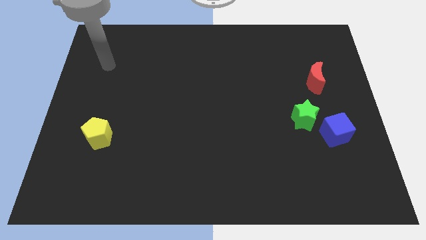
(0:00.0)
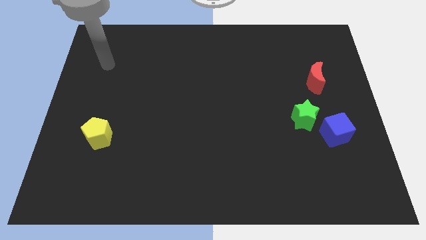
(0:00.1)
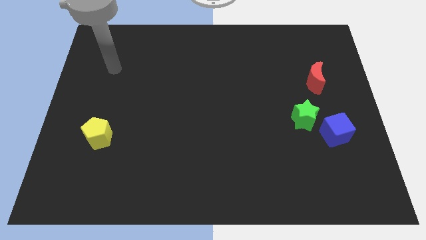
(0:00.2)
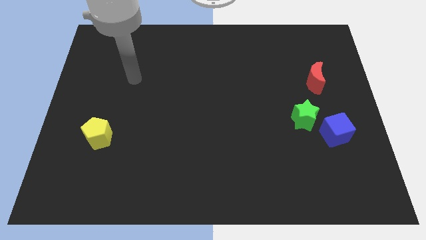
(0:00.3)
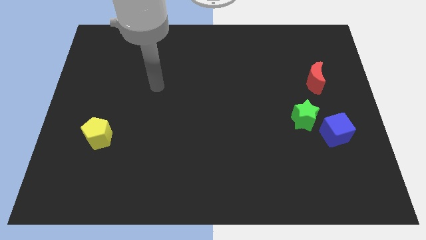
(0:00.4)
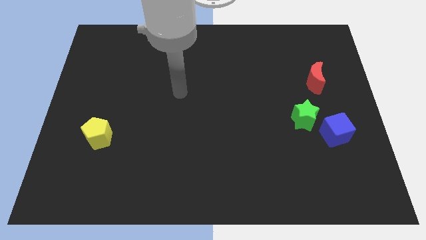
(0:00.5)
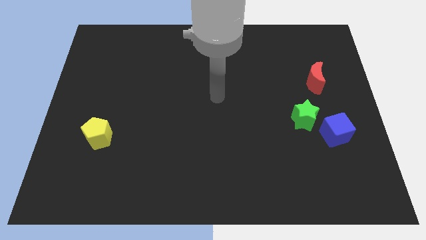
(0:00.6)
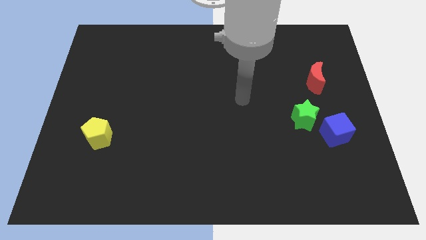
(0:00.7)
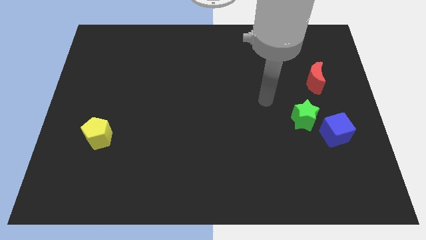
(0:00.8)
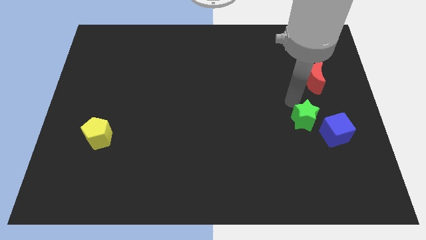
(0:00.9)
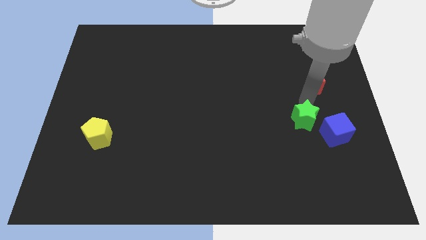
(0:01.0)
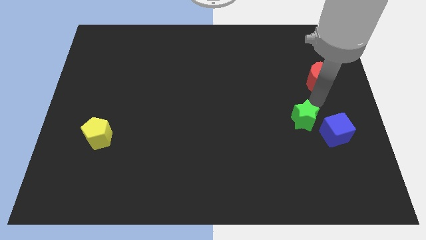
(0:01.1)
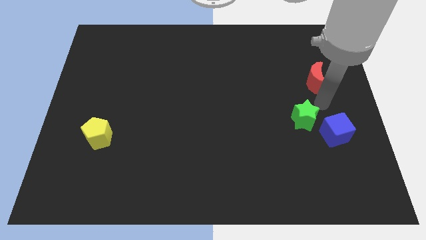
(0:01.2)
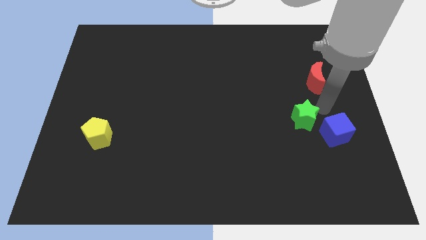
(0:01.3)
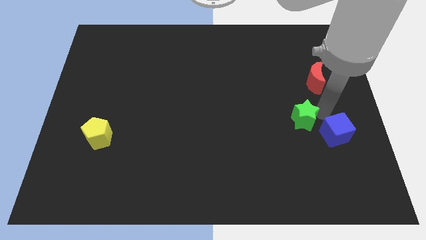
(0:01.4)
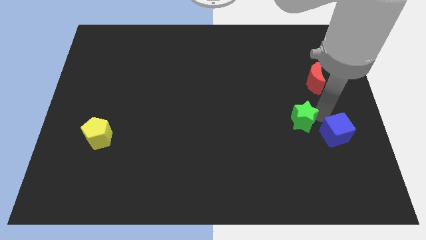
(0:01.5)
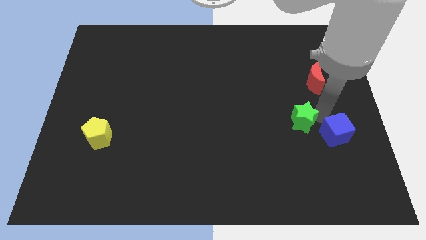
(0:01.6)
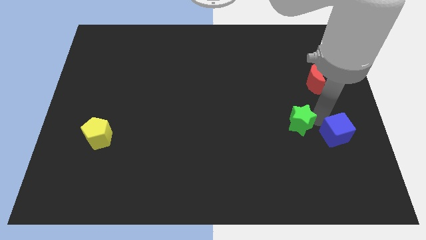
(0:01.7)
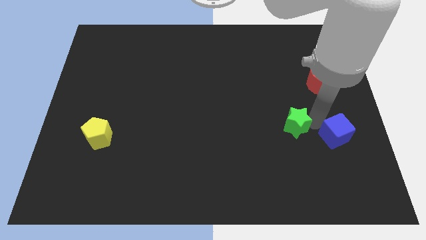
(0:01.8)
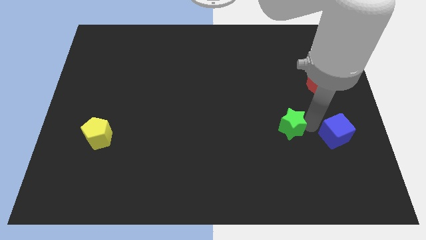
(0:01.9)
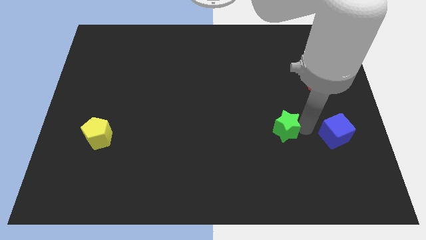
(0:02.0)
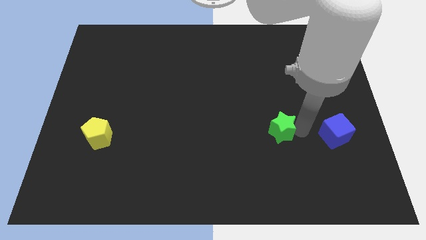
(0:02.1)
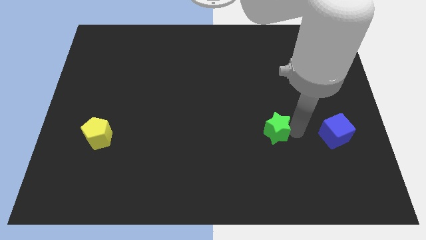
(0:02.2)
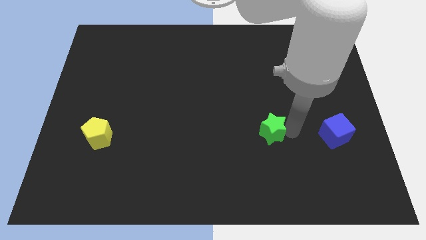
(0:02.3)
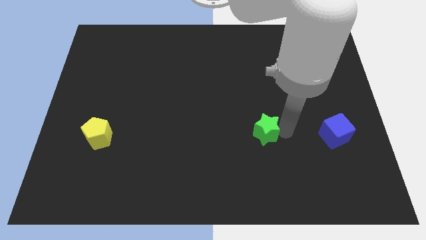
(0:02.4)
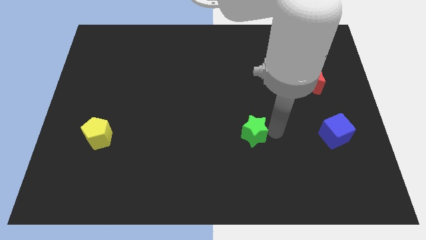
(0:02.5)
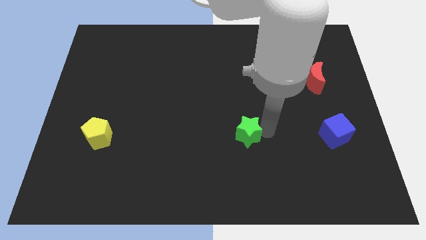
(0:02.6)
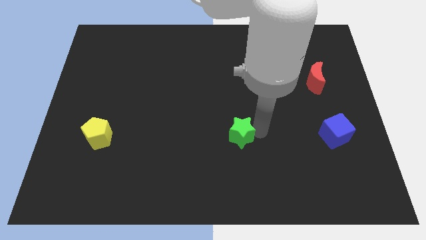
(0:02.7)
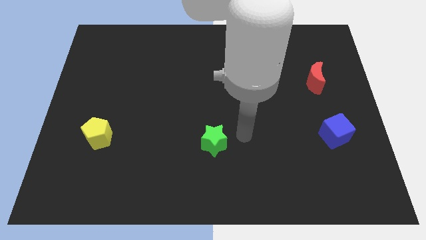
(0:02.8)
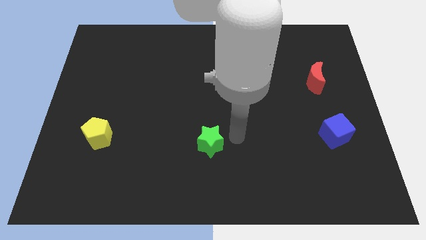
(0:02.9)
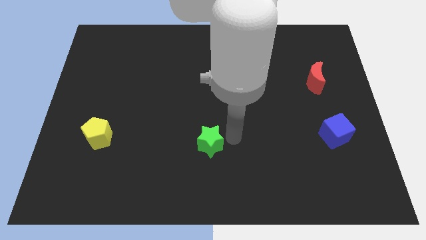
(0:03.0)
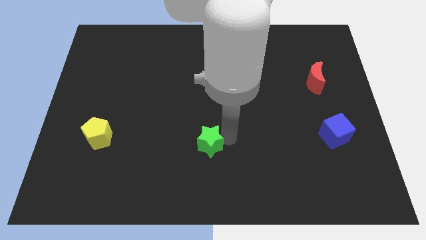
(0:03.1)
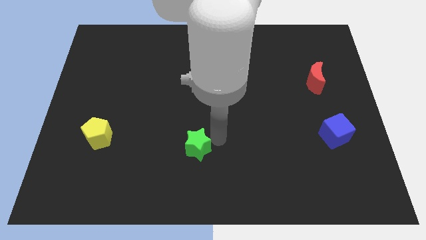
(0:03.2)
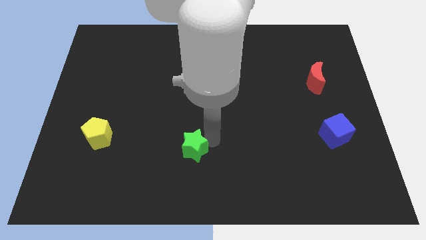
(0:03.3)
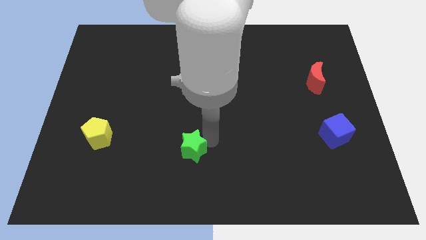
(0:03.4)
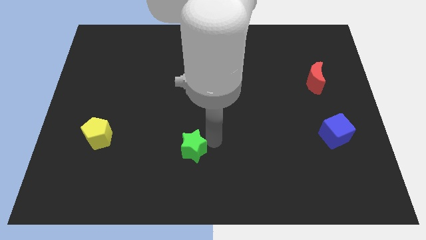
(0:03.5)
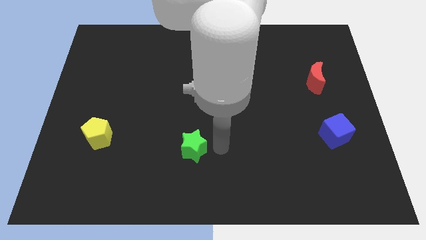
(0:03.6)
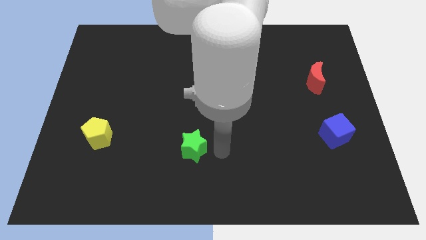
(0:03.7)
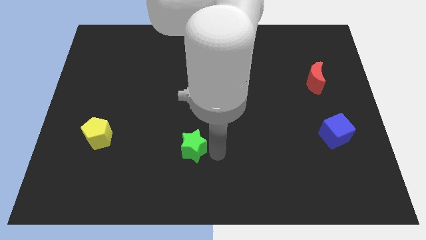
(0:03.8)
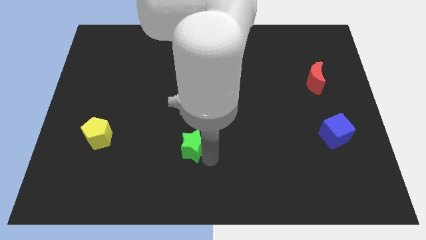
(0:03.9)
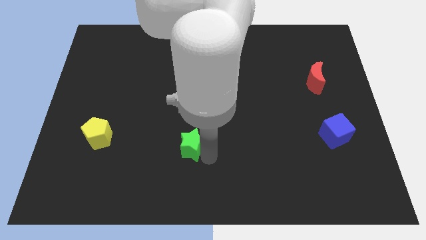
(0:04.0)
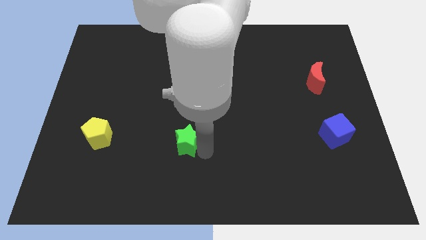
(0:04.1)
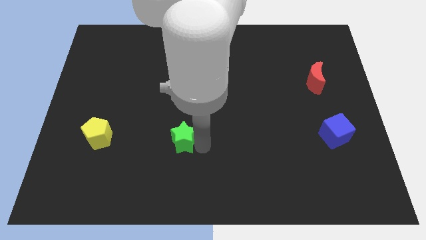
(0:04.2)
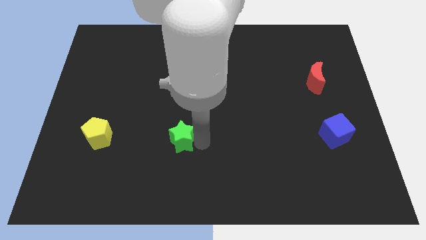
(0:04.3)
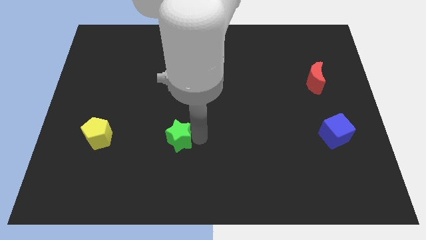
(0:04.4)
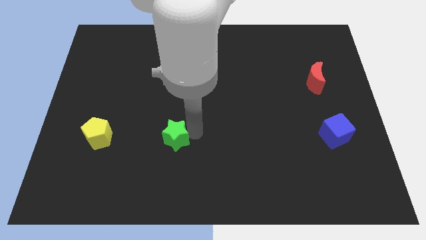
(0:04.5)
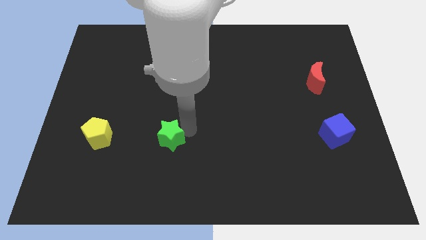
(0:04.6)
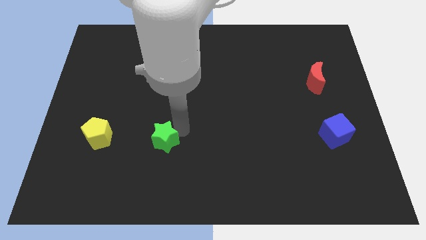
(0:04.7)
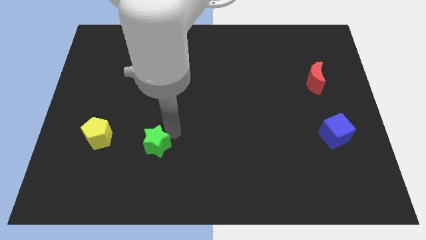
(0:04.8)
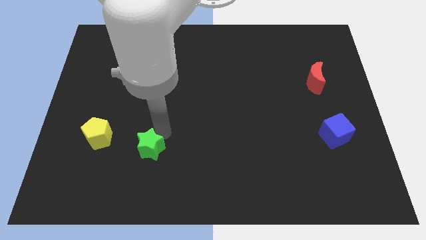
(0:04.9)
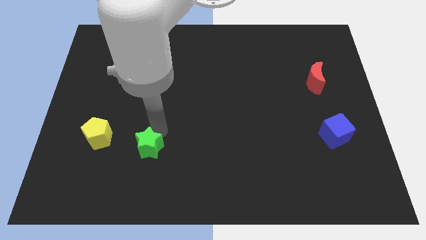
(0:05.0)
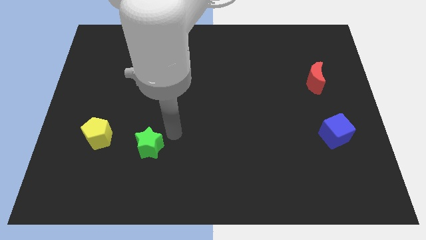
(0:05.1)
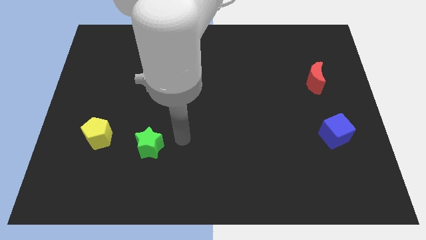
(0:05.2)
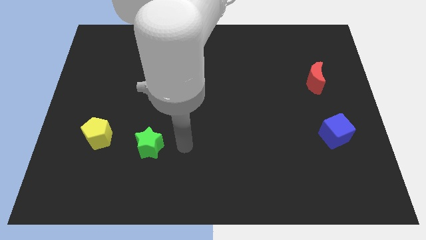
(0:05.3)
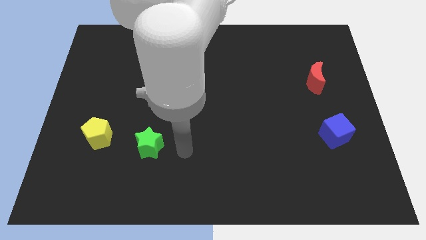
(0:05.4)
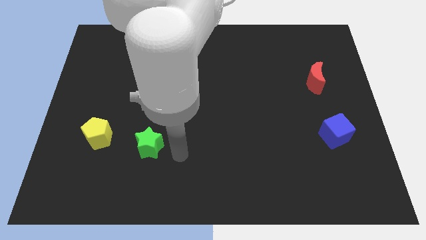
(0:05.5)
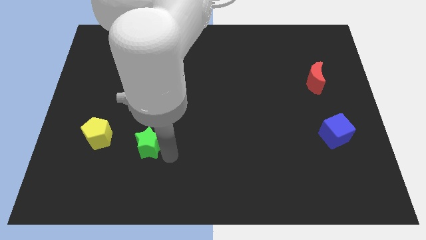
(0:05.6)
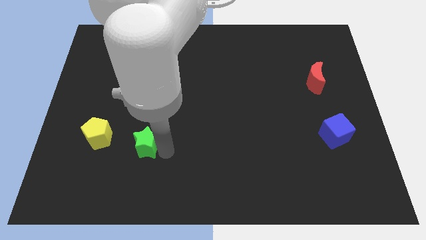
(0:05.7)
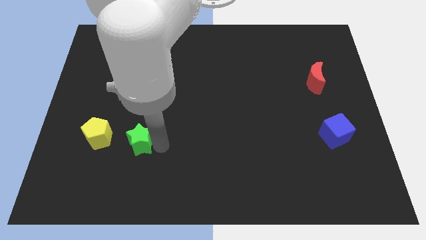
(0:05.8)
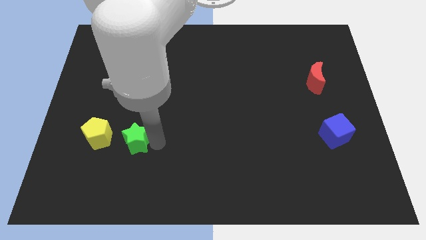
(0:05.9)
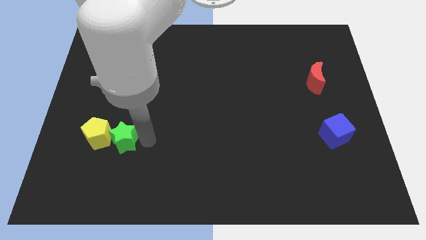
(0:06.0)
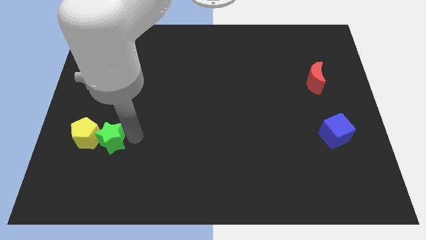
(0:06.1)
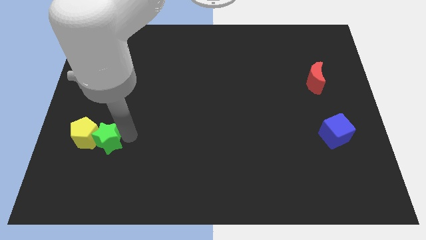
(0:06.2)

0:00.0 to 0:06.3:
put the star towards the yellow pentagon

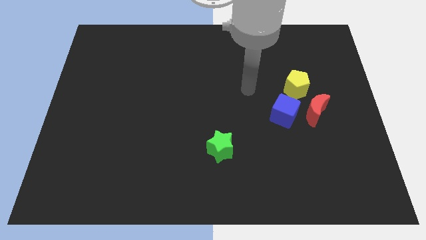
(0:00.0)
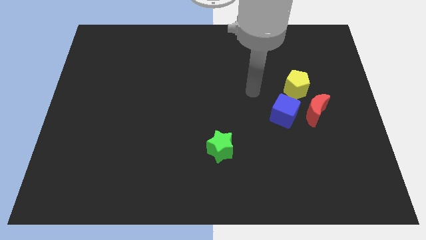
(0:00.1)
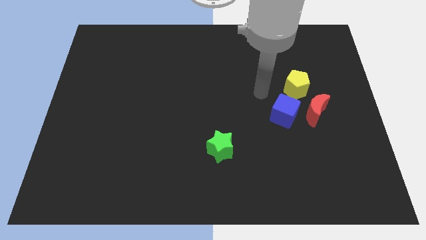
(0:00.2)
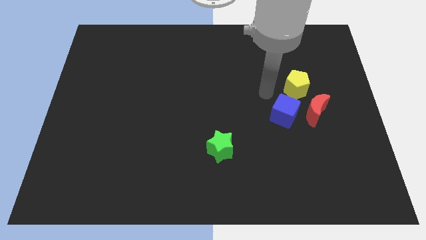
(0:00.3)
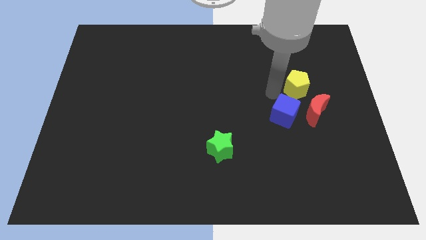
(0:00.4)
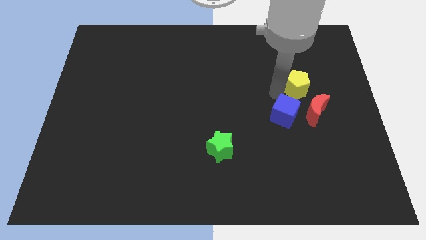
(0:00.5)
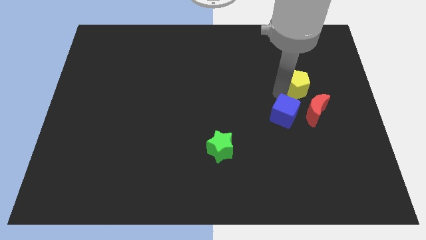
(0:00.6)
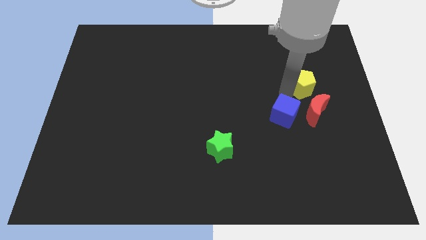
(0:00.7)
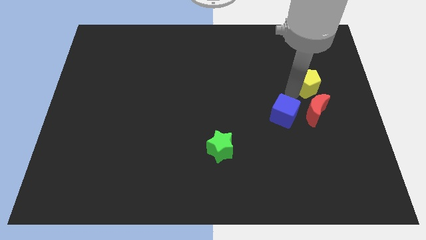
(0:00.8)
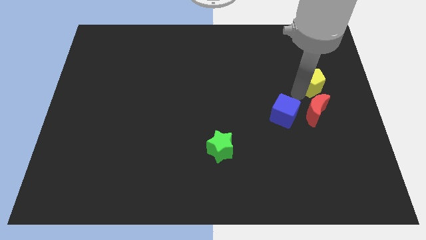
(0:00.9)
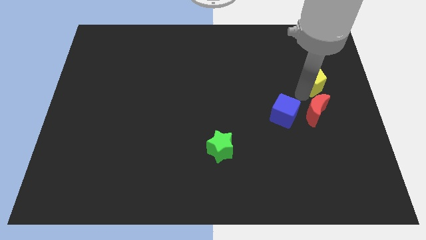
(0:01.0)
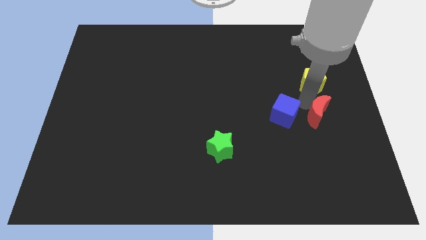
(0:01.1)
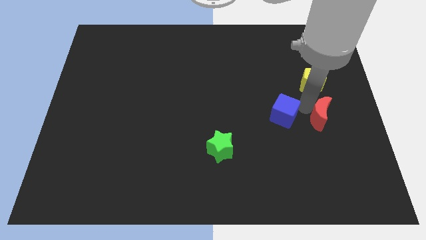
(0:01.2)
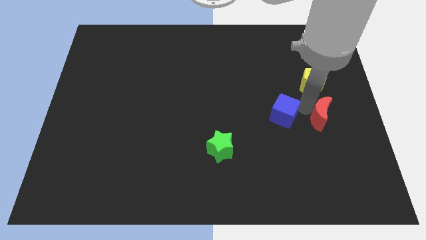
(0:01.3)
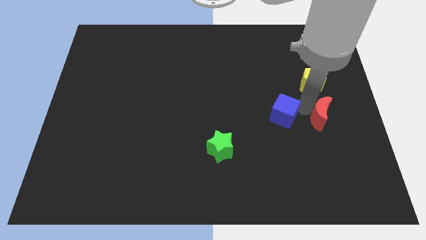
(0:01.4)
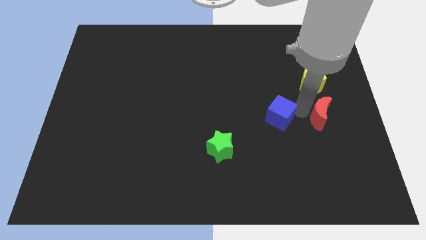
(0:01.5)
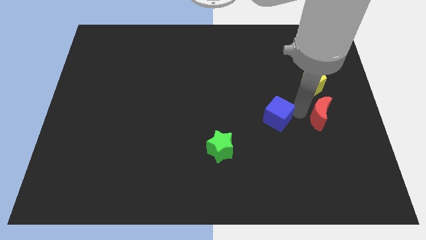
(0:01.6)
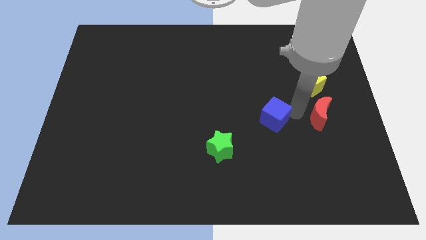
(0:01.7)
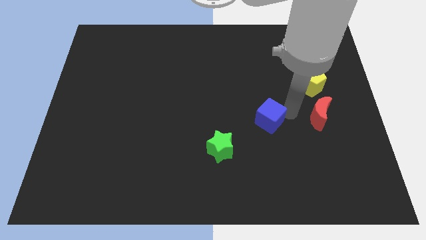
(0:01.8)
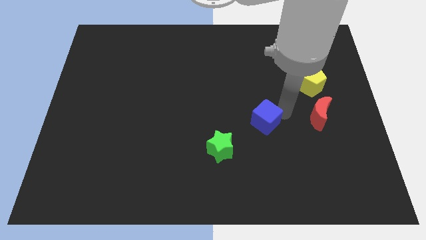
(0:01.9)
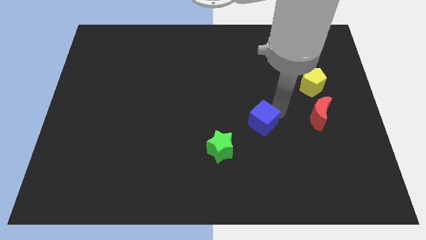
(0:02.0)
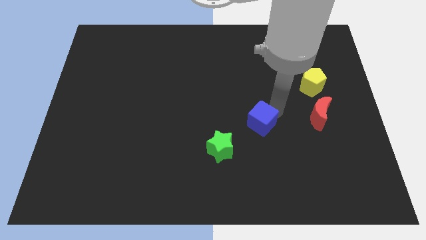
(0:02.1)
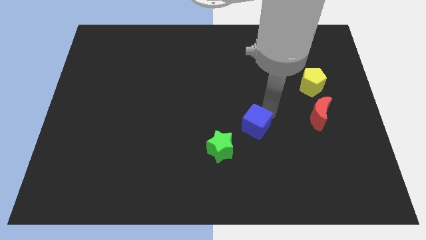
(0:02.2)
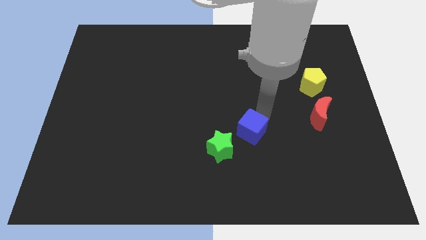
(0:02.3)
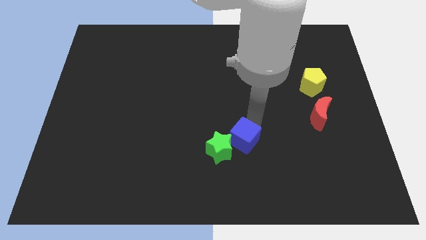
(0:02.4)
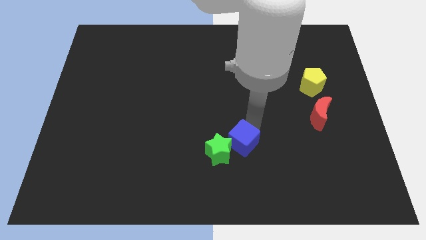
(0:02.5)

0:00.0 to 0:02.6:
push the cube close to the green star
